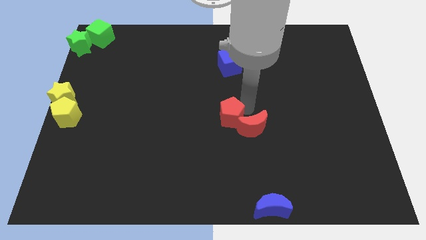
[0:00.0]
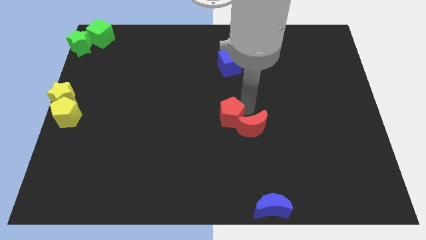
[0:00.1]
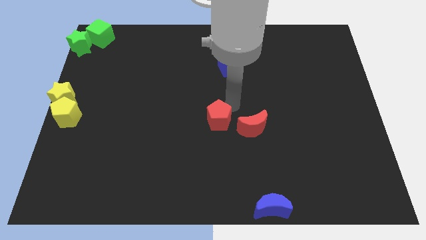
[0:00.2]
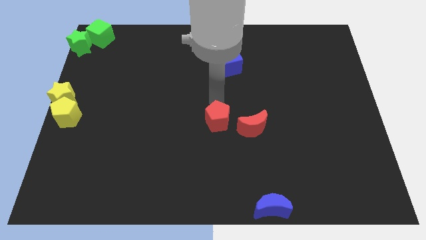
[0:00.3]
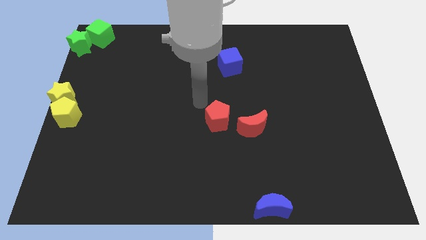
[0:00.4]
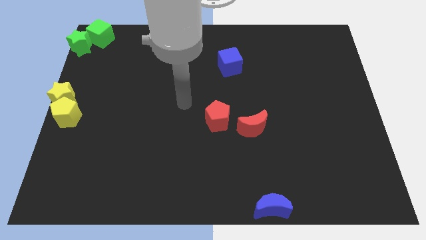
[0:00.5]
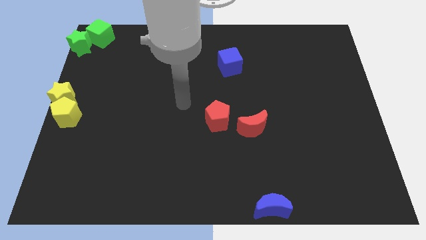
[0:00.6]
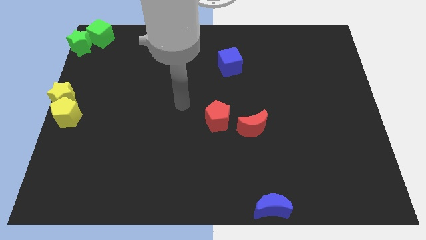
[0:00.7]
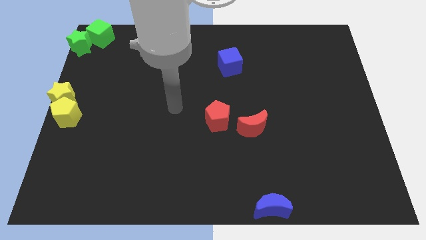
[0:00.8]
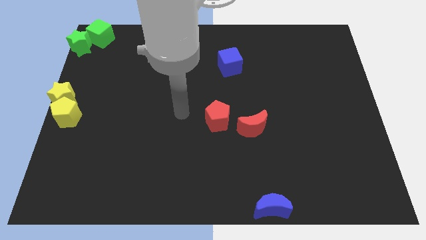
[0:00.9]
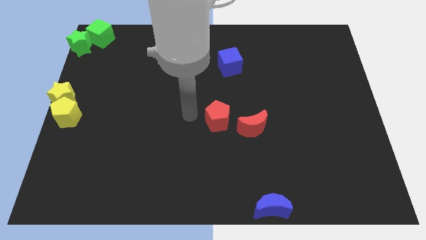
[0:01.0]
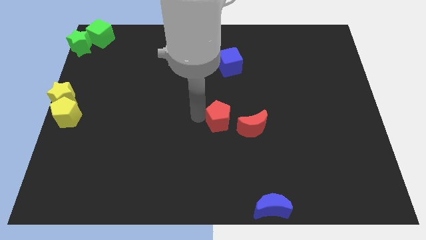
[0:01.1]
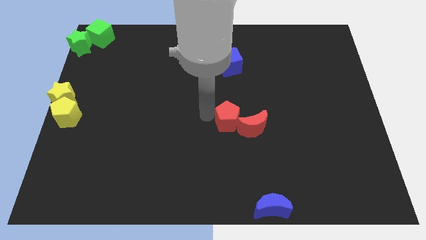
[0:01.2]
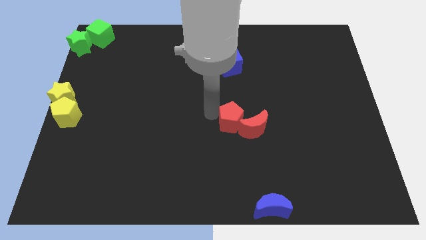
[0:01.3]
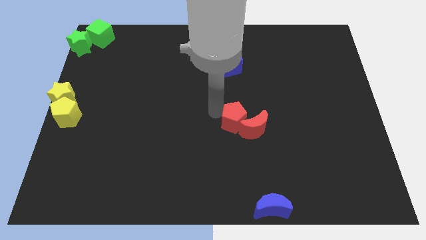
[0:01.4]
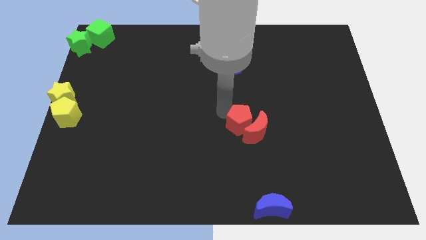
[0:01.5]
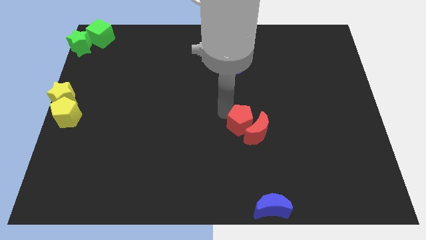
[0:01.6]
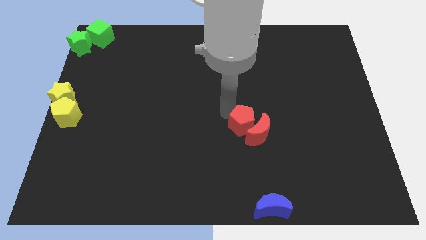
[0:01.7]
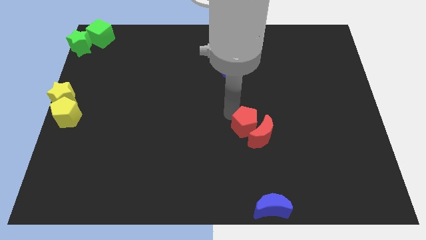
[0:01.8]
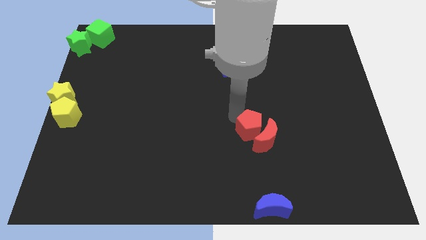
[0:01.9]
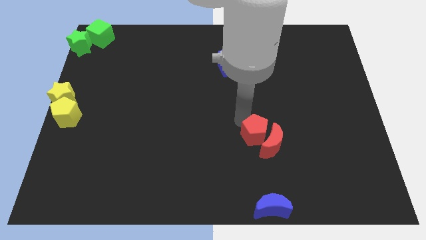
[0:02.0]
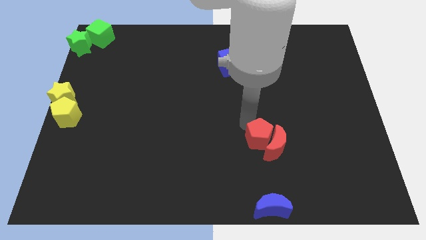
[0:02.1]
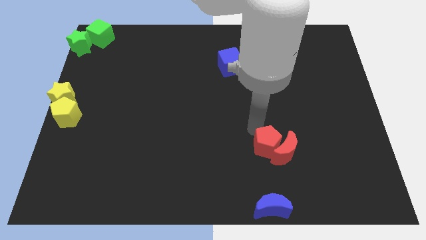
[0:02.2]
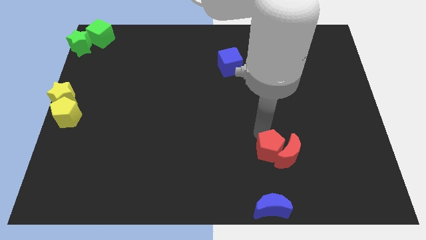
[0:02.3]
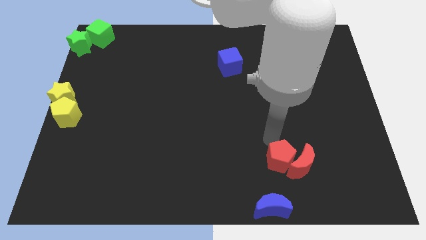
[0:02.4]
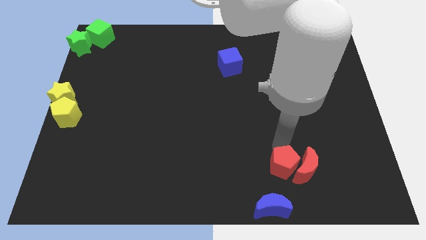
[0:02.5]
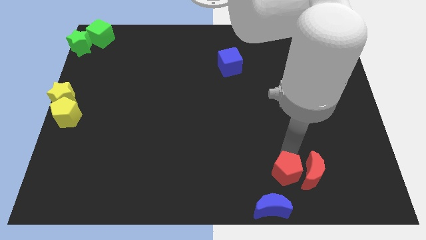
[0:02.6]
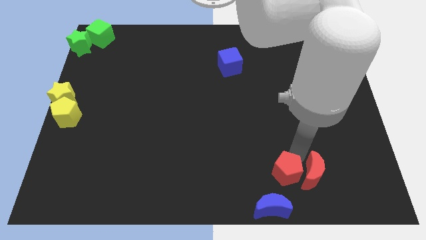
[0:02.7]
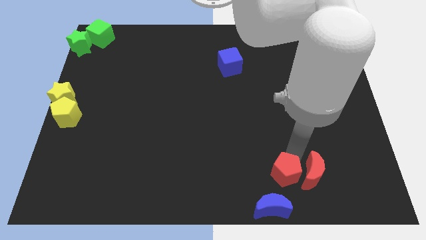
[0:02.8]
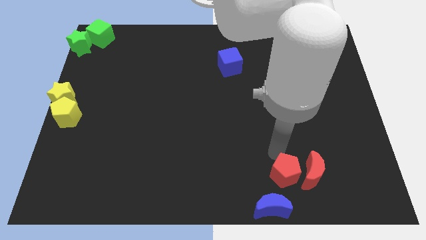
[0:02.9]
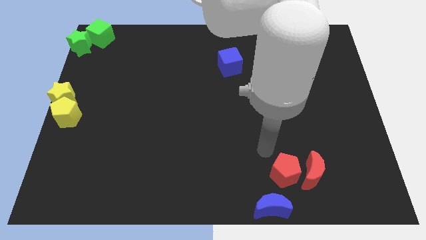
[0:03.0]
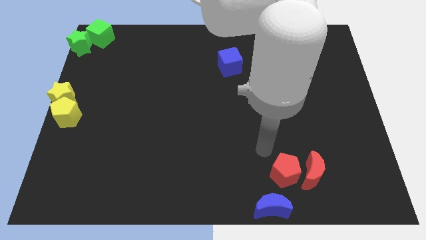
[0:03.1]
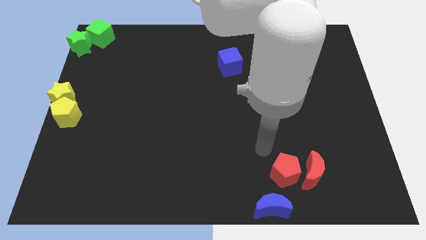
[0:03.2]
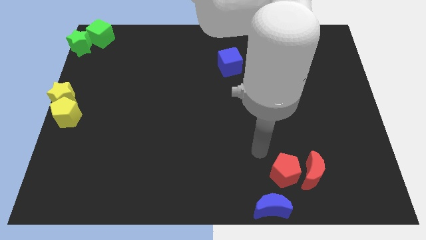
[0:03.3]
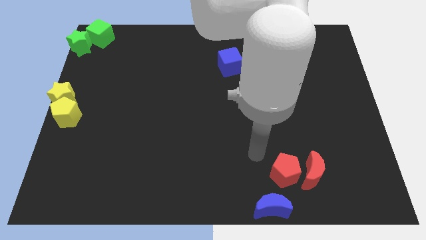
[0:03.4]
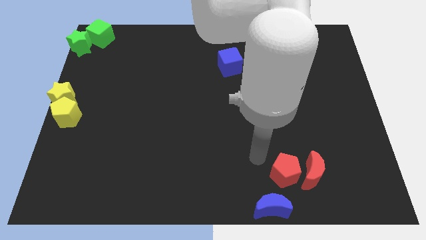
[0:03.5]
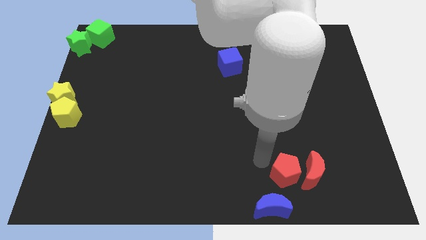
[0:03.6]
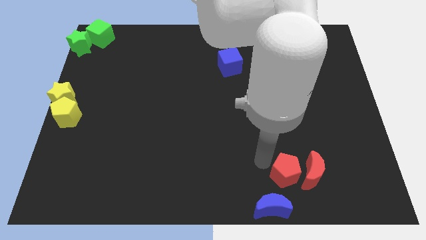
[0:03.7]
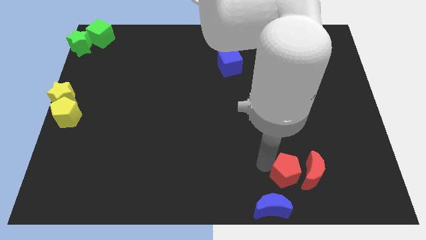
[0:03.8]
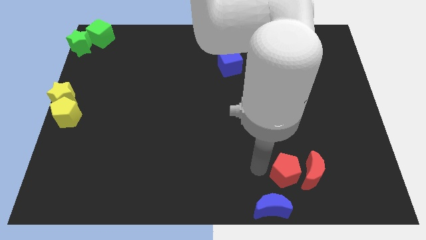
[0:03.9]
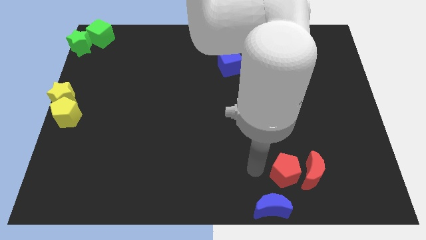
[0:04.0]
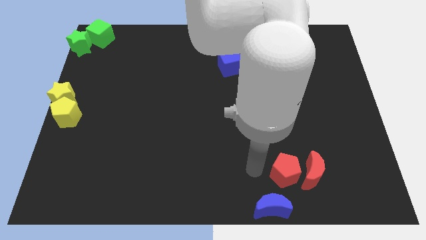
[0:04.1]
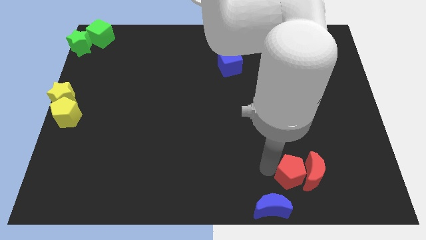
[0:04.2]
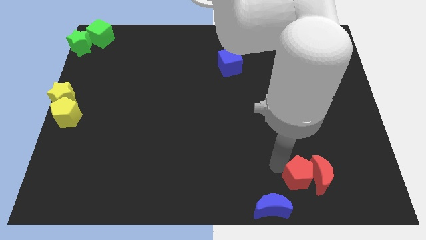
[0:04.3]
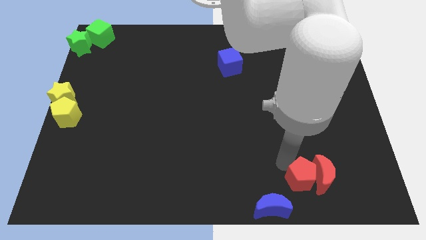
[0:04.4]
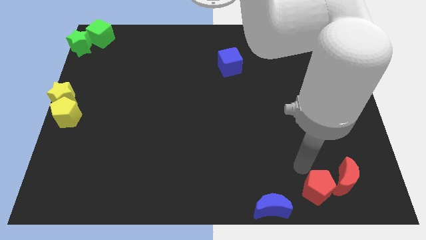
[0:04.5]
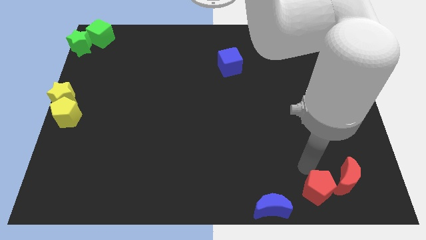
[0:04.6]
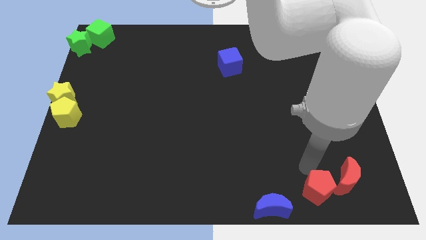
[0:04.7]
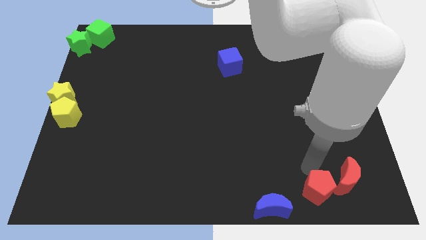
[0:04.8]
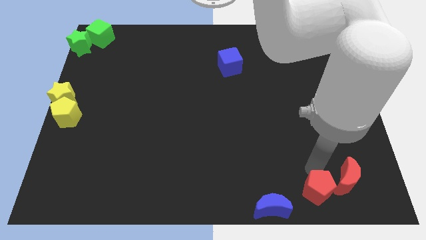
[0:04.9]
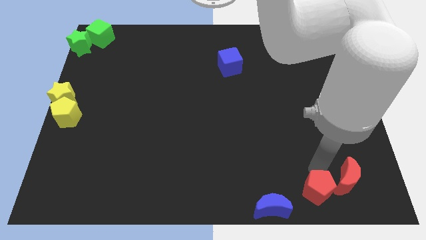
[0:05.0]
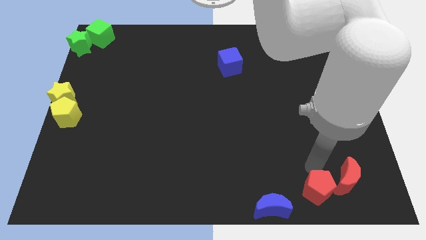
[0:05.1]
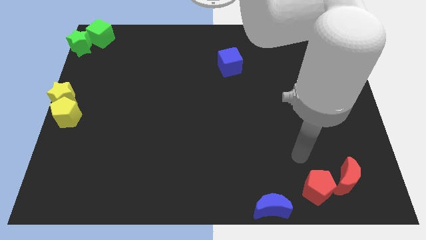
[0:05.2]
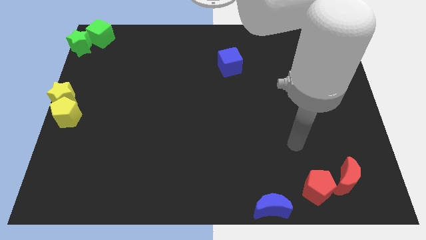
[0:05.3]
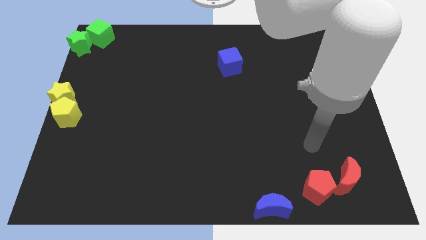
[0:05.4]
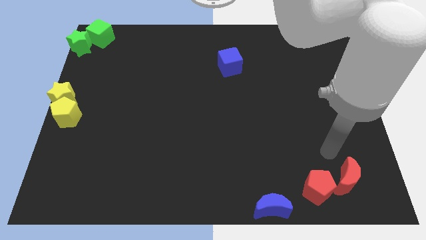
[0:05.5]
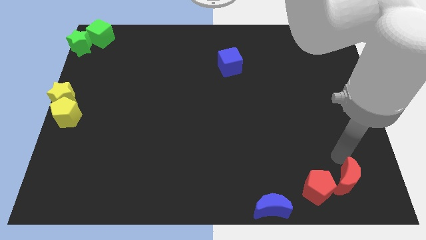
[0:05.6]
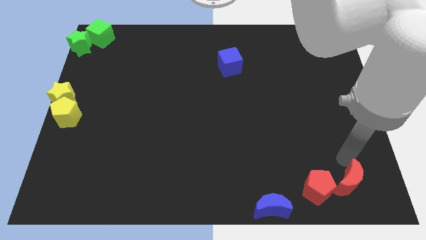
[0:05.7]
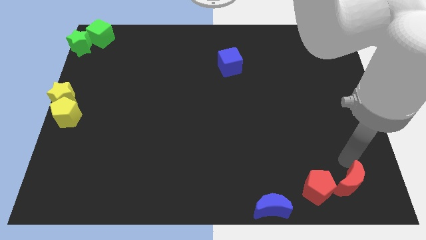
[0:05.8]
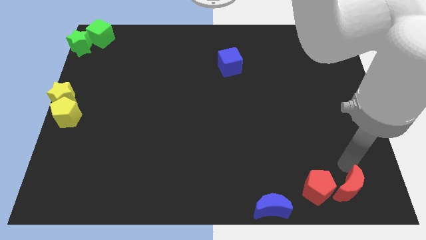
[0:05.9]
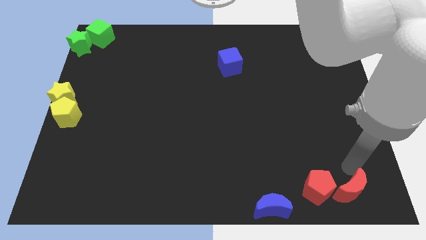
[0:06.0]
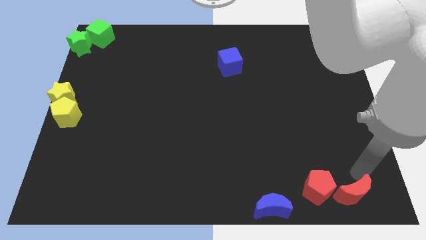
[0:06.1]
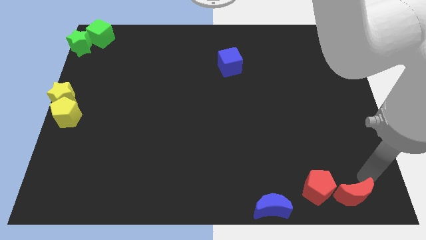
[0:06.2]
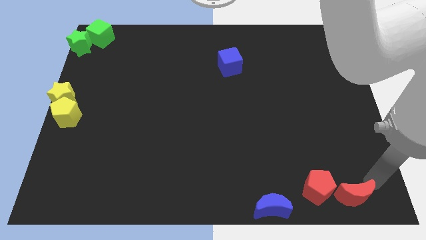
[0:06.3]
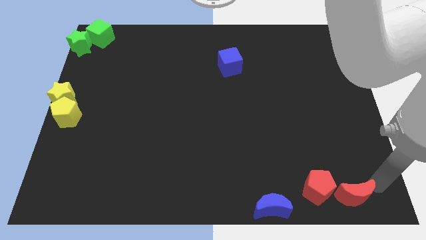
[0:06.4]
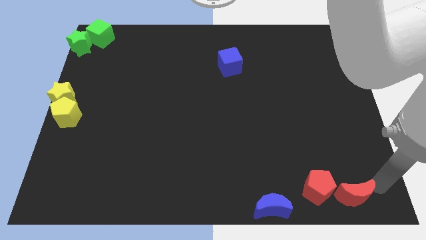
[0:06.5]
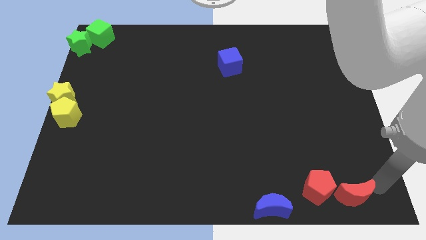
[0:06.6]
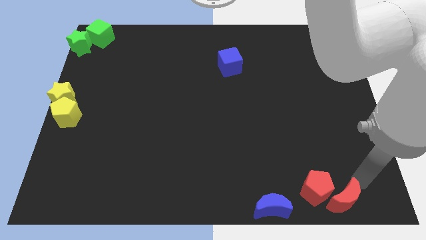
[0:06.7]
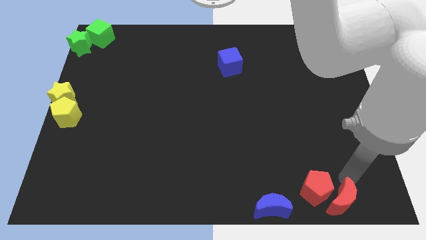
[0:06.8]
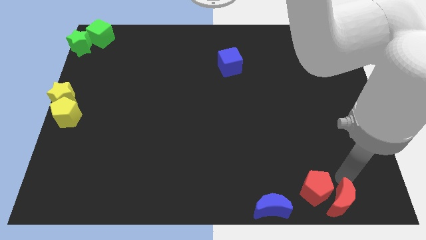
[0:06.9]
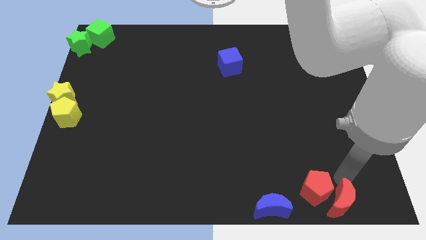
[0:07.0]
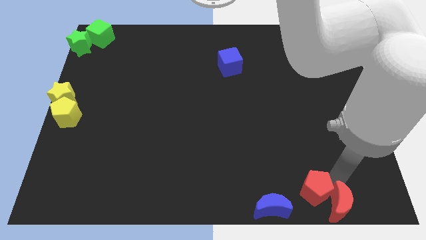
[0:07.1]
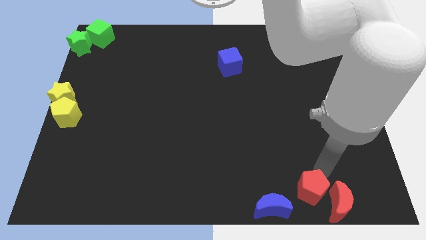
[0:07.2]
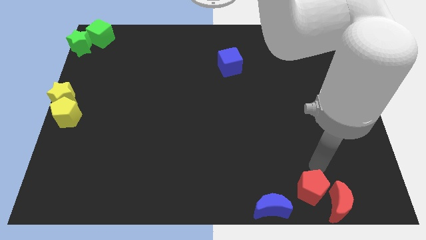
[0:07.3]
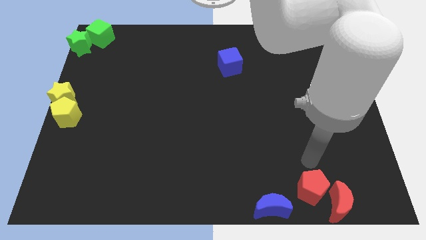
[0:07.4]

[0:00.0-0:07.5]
move red pentagon and red moon towards the bottom right of the board

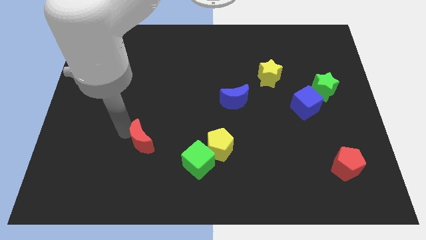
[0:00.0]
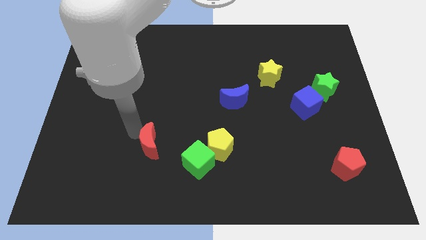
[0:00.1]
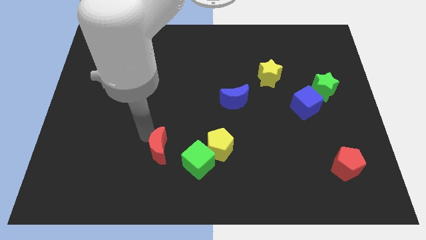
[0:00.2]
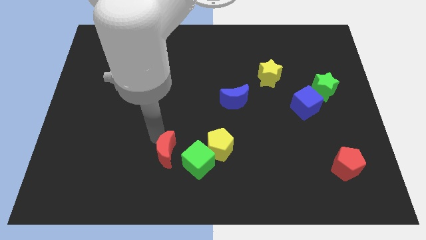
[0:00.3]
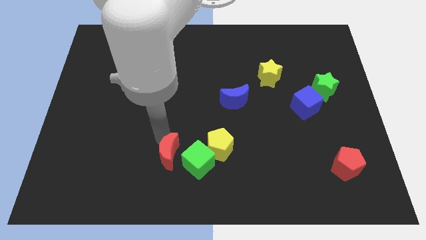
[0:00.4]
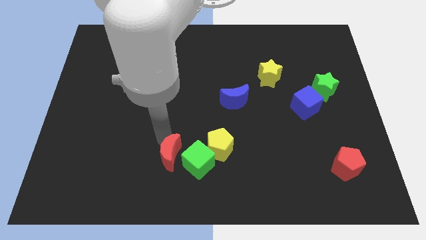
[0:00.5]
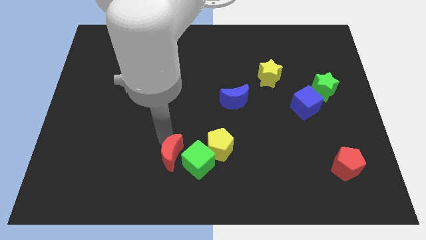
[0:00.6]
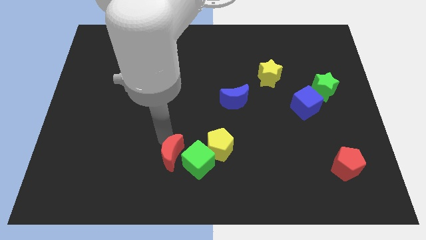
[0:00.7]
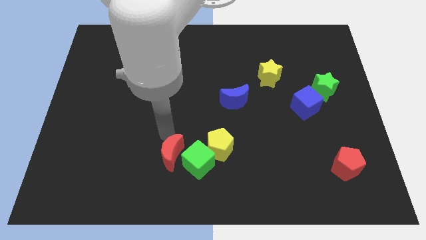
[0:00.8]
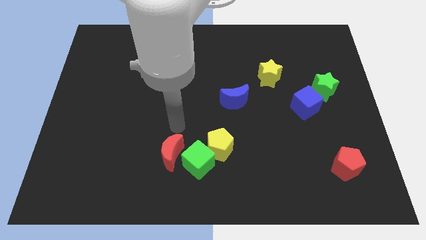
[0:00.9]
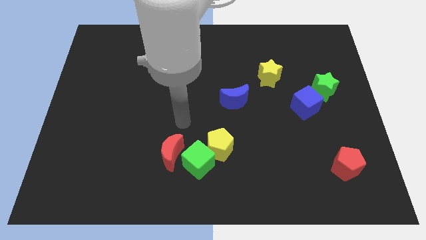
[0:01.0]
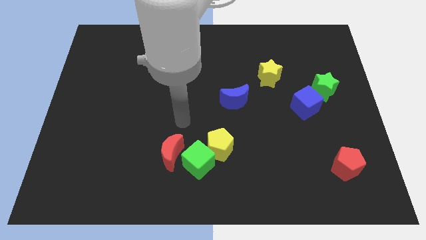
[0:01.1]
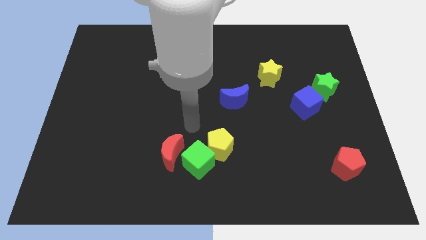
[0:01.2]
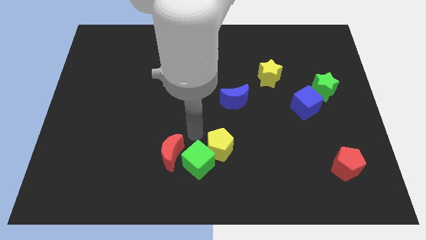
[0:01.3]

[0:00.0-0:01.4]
place the red moon left to the green cube
